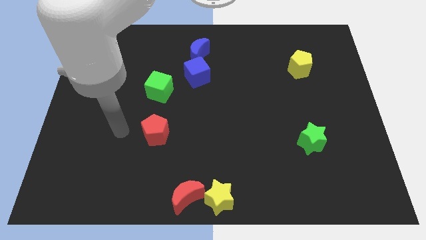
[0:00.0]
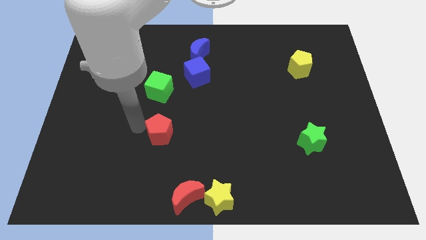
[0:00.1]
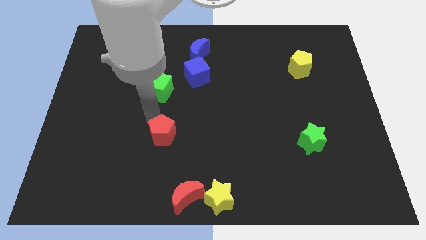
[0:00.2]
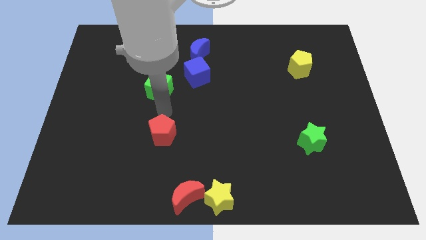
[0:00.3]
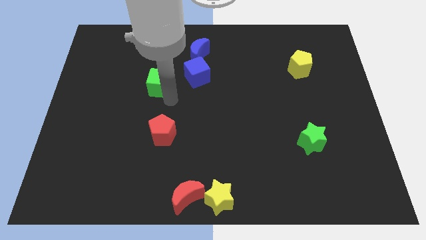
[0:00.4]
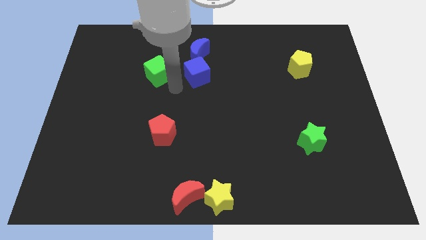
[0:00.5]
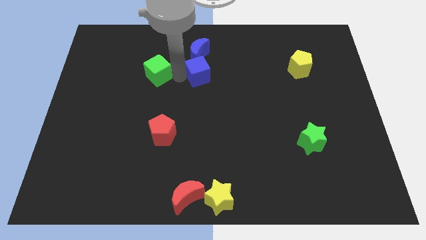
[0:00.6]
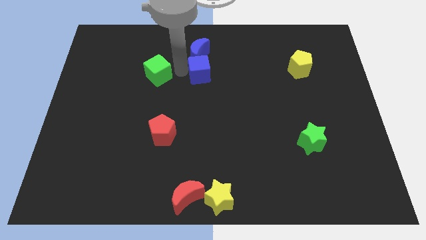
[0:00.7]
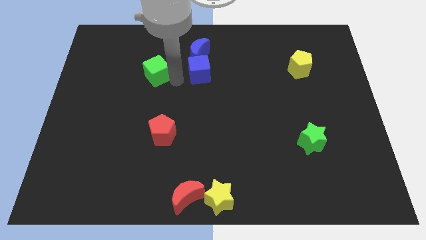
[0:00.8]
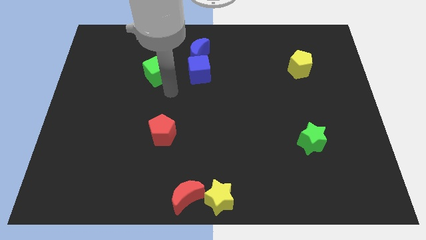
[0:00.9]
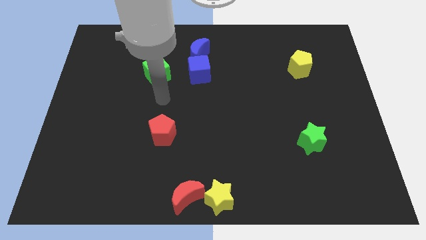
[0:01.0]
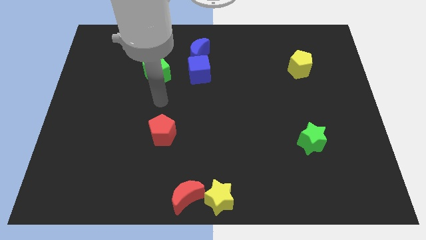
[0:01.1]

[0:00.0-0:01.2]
put the green cube to the left of the blue cube

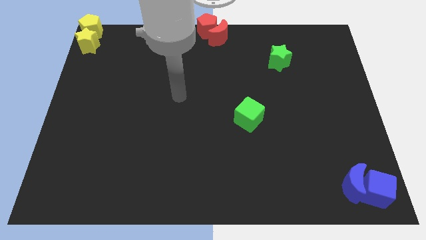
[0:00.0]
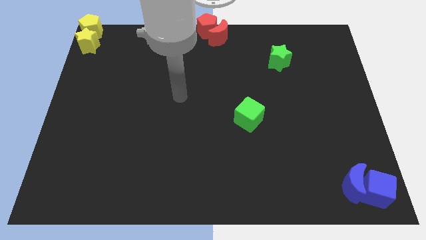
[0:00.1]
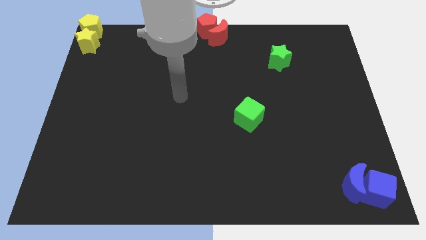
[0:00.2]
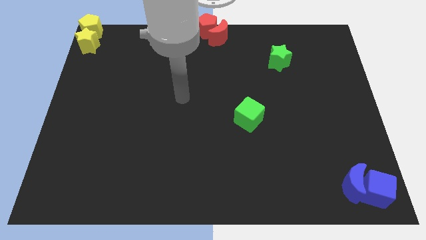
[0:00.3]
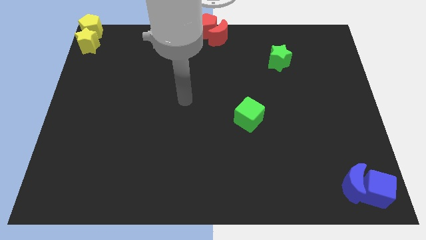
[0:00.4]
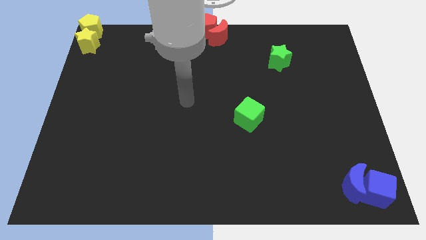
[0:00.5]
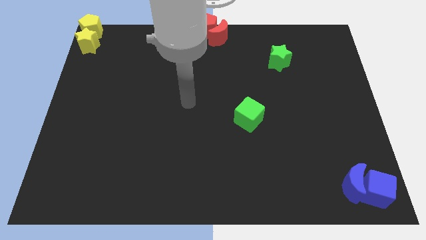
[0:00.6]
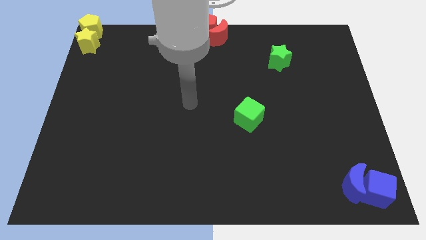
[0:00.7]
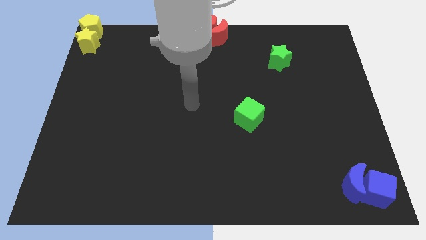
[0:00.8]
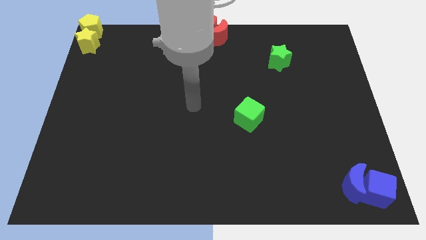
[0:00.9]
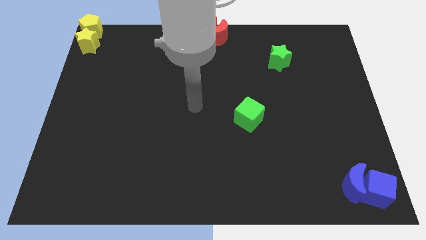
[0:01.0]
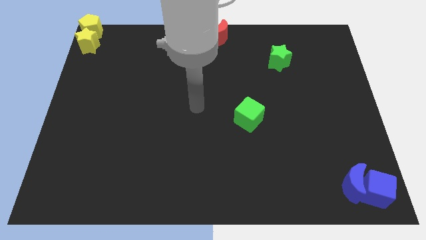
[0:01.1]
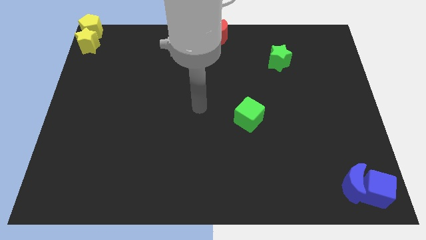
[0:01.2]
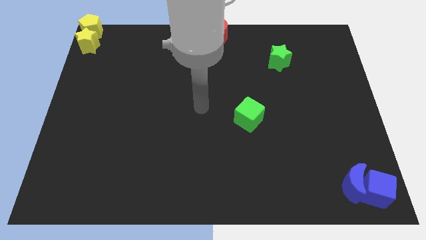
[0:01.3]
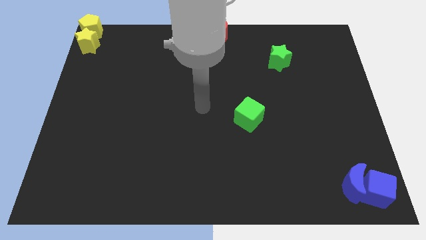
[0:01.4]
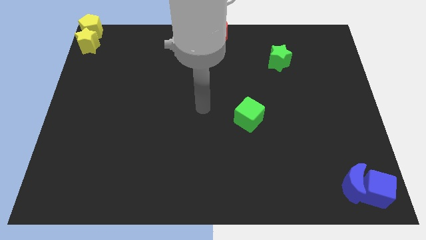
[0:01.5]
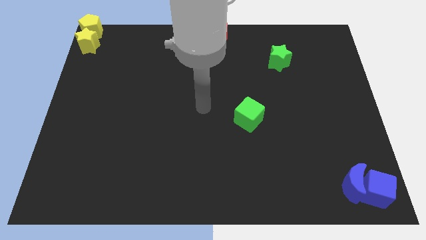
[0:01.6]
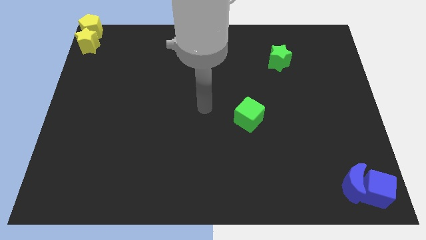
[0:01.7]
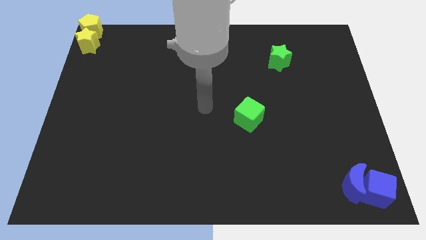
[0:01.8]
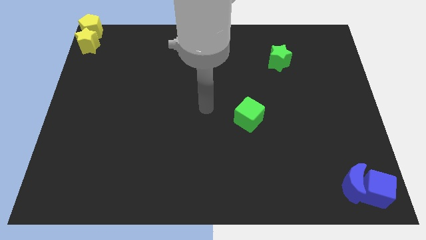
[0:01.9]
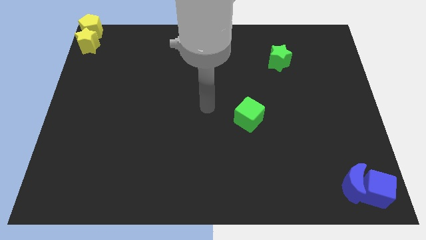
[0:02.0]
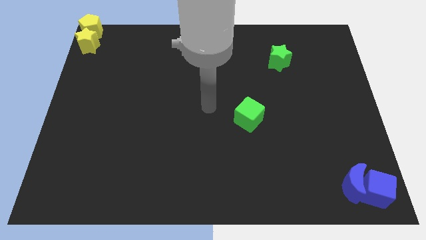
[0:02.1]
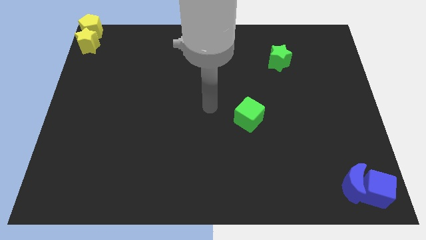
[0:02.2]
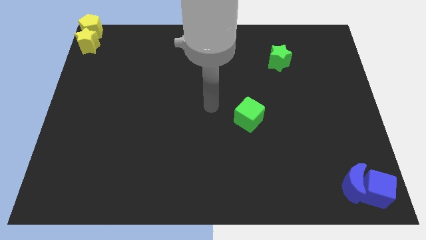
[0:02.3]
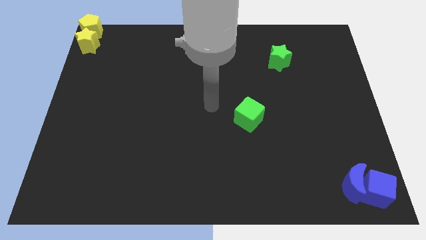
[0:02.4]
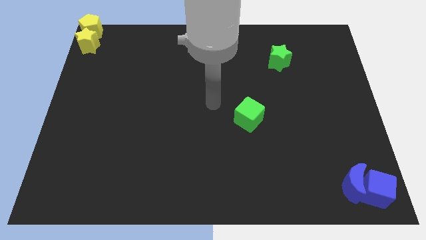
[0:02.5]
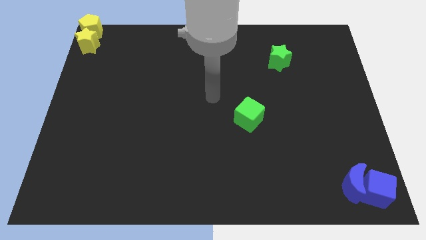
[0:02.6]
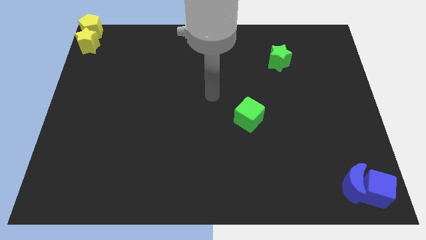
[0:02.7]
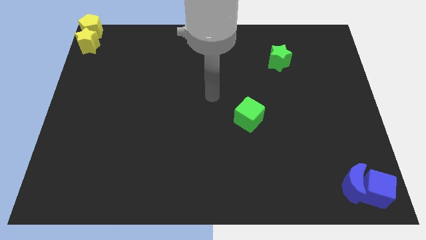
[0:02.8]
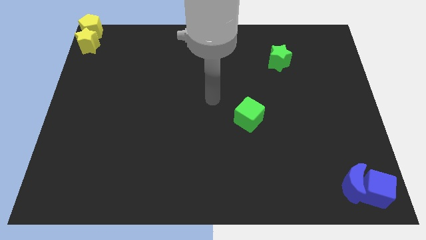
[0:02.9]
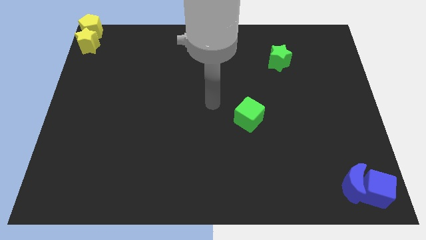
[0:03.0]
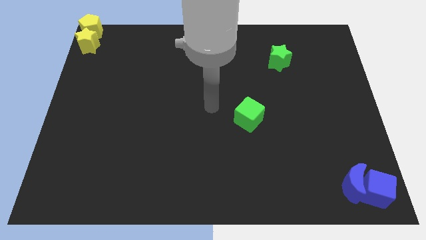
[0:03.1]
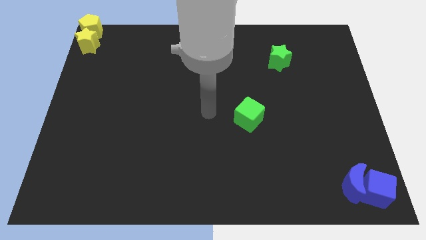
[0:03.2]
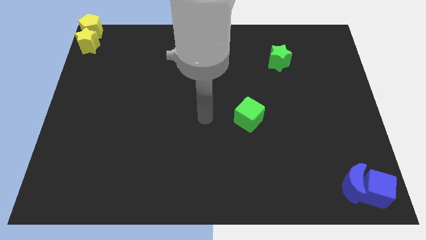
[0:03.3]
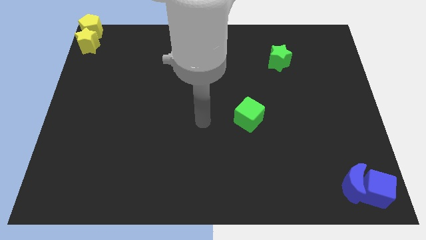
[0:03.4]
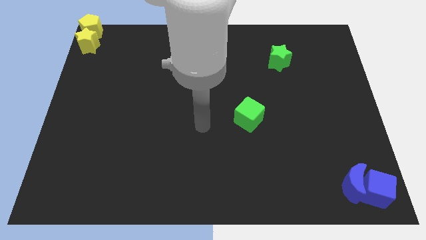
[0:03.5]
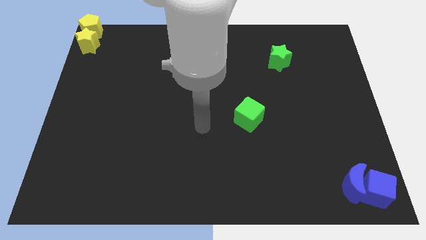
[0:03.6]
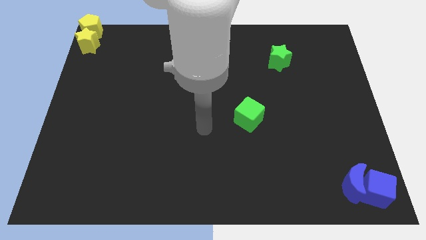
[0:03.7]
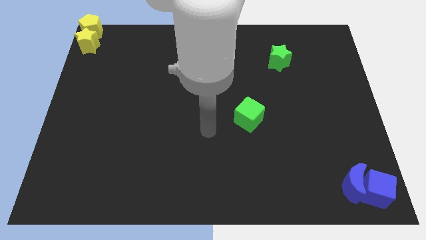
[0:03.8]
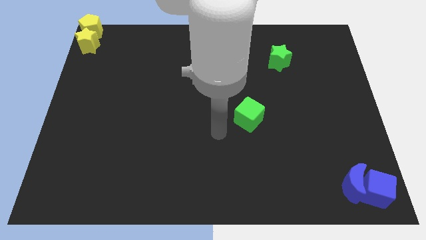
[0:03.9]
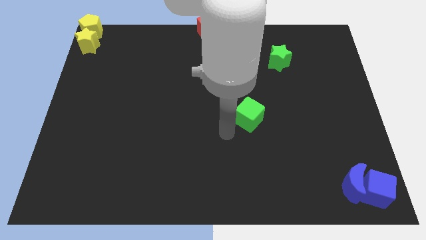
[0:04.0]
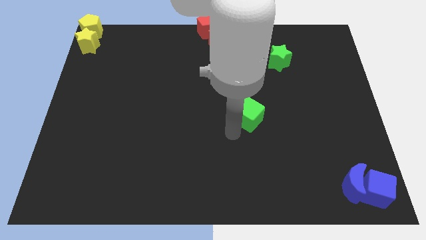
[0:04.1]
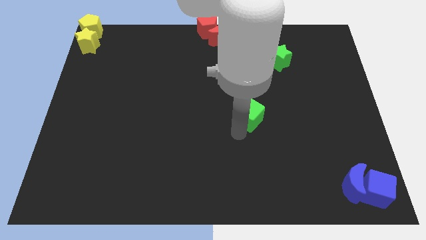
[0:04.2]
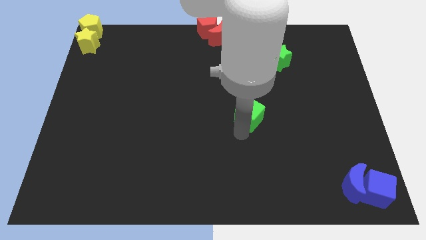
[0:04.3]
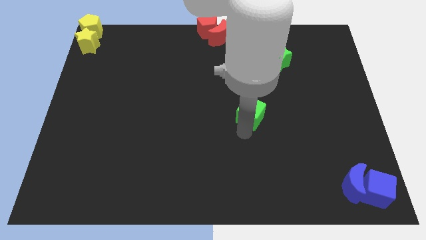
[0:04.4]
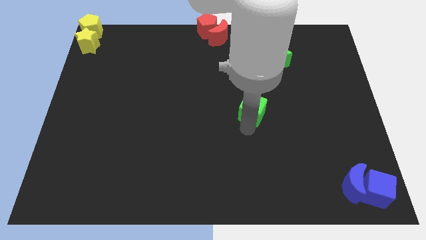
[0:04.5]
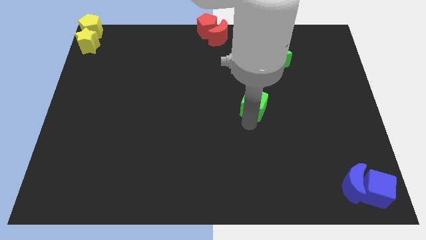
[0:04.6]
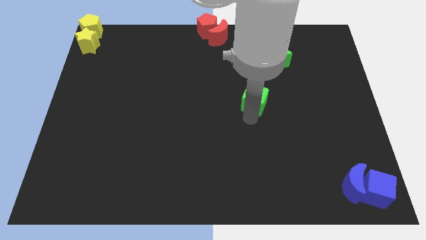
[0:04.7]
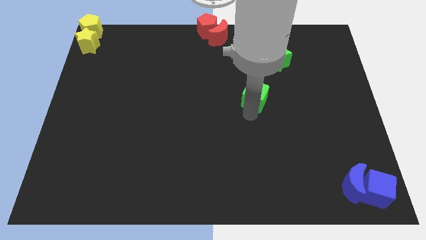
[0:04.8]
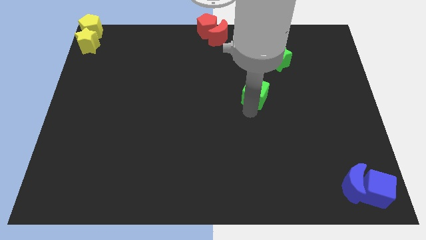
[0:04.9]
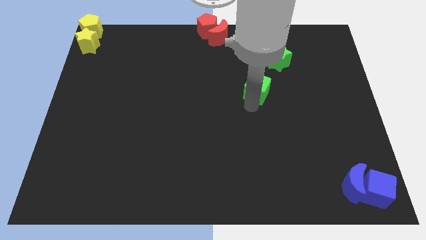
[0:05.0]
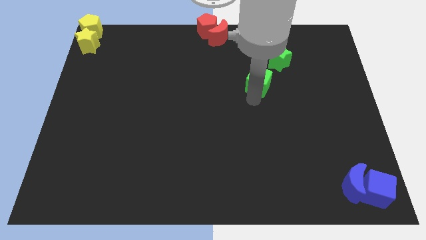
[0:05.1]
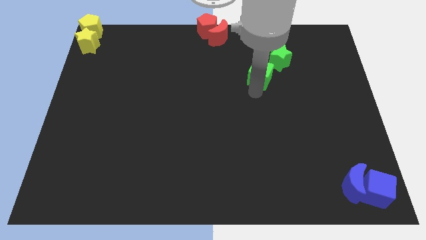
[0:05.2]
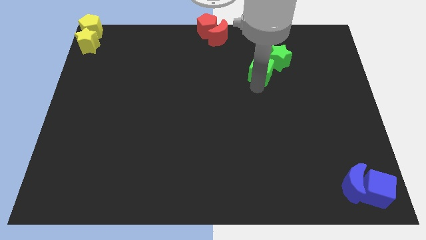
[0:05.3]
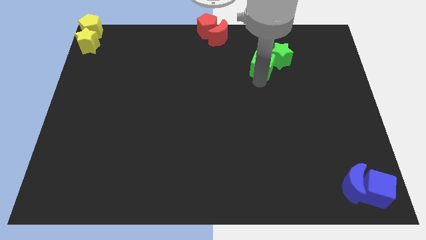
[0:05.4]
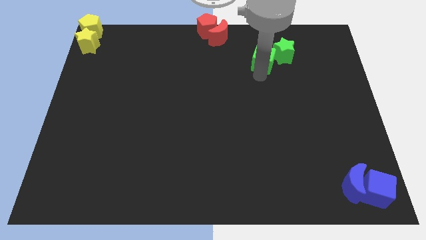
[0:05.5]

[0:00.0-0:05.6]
move the green cube into the left side of the green star

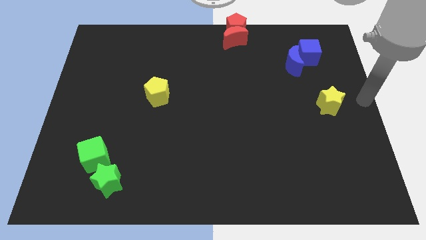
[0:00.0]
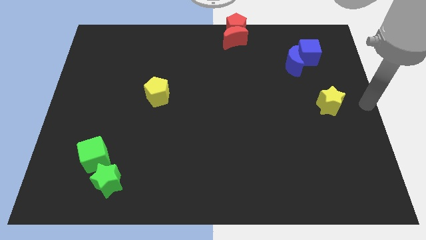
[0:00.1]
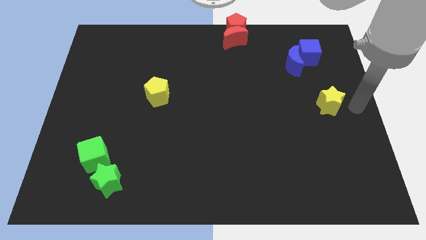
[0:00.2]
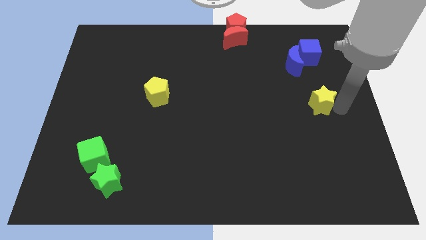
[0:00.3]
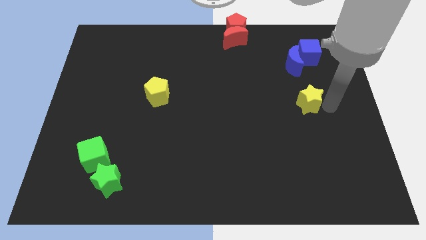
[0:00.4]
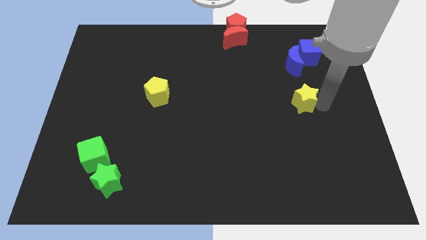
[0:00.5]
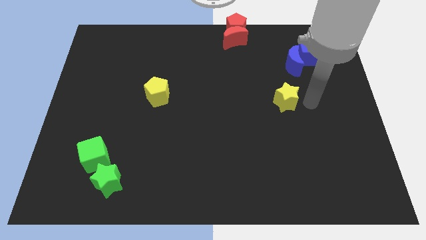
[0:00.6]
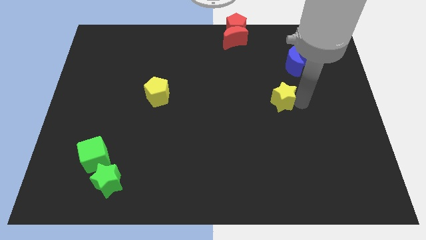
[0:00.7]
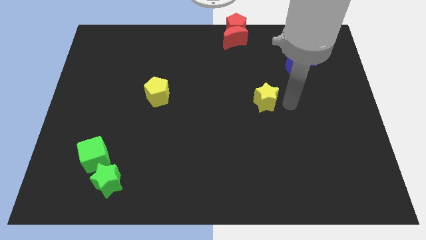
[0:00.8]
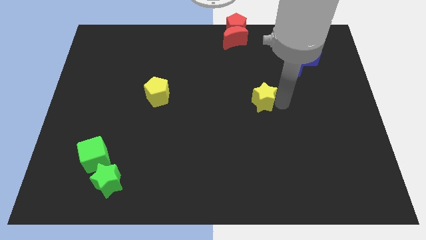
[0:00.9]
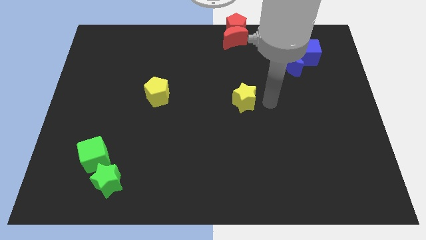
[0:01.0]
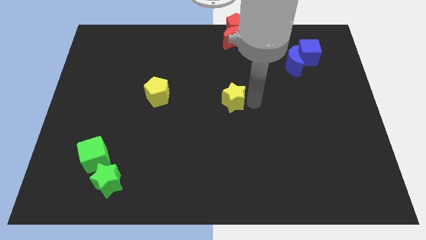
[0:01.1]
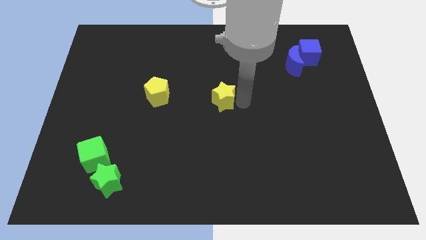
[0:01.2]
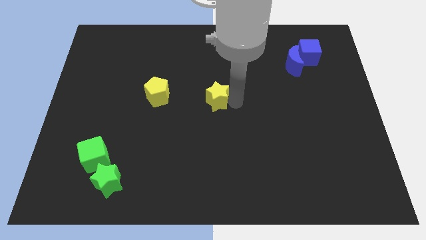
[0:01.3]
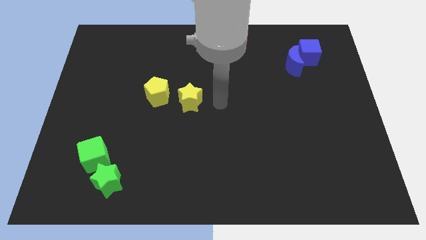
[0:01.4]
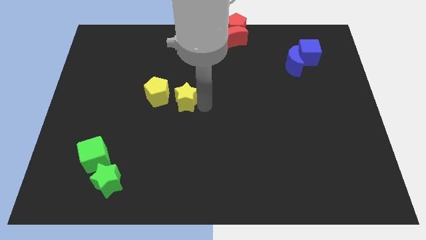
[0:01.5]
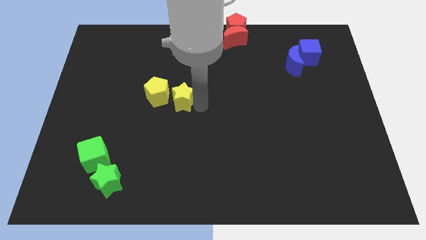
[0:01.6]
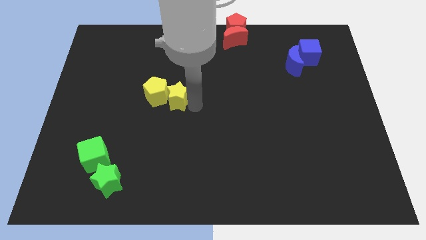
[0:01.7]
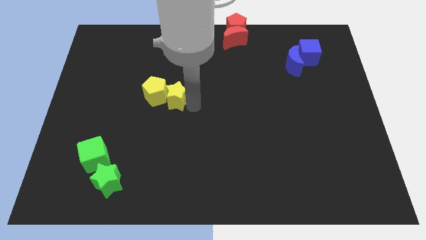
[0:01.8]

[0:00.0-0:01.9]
push the yellow star towards the yellow pentagon

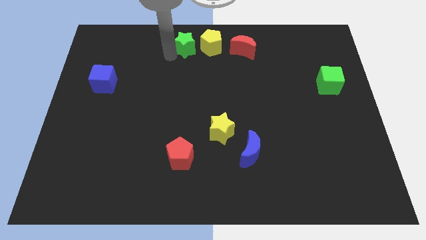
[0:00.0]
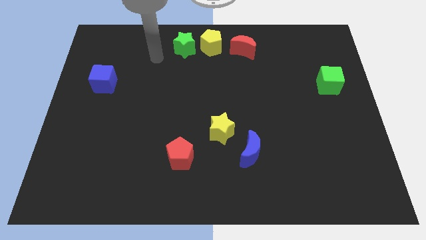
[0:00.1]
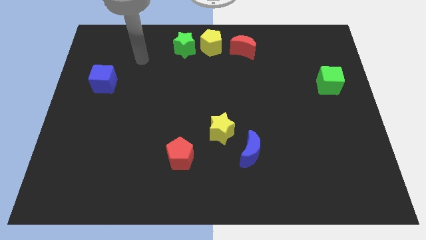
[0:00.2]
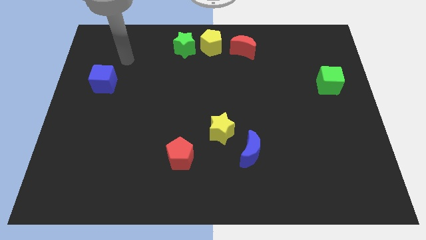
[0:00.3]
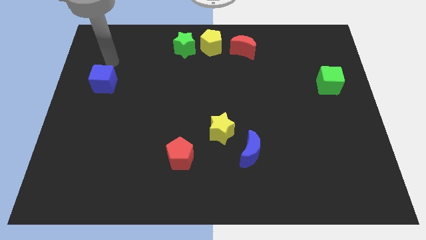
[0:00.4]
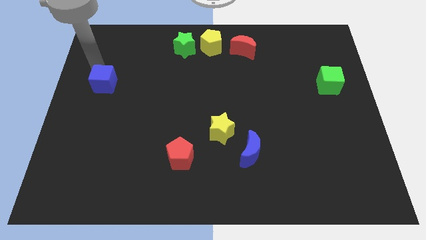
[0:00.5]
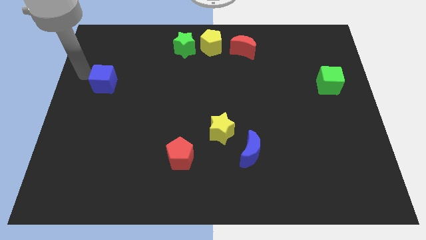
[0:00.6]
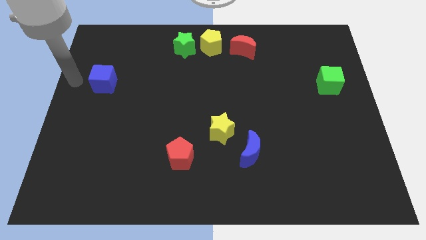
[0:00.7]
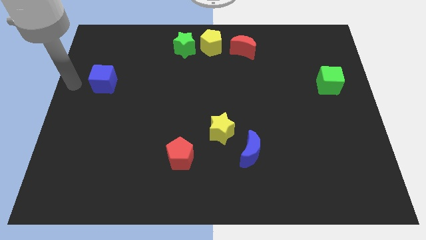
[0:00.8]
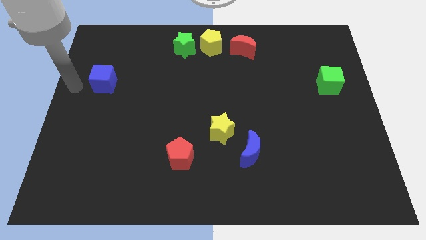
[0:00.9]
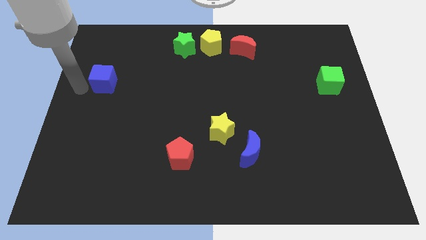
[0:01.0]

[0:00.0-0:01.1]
place your arm to the left of blue cube
